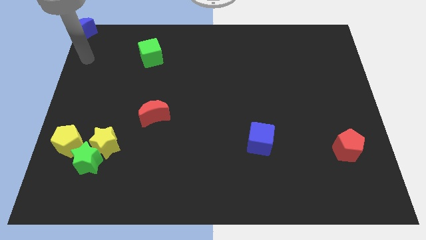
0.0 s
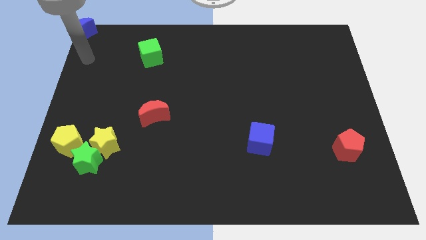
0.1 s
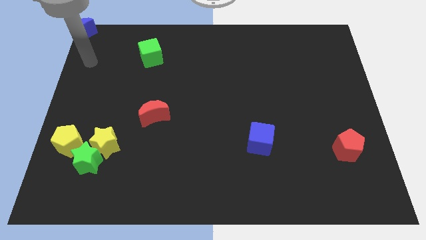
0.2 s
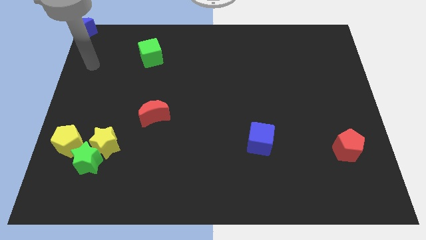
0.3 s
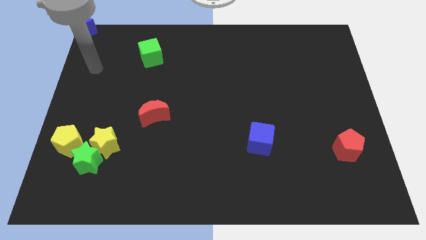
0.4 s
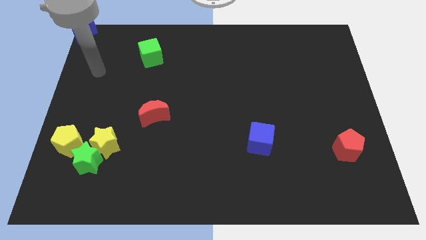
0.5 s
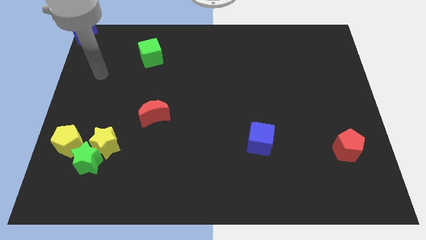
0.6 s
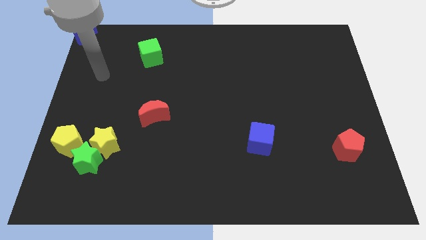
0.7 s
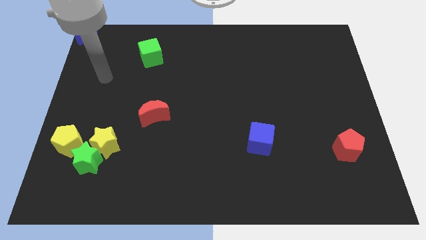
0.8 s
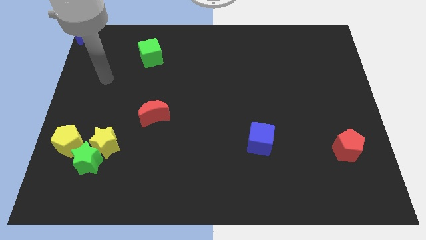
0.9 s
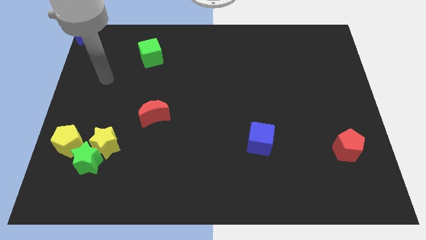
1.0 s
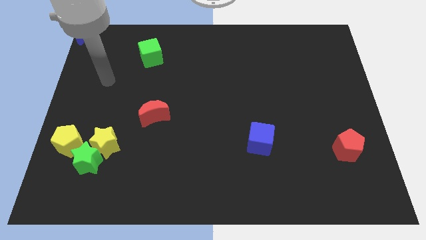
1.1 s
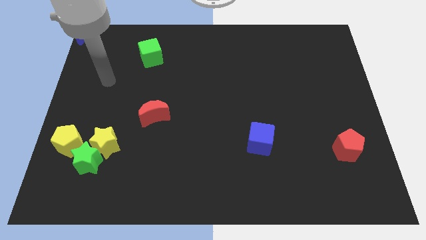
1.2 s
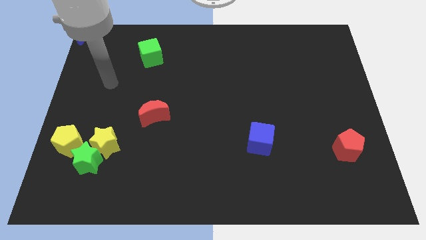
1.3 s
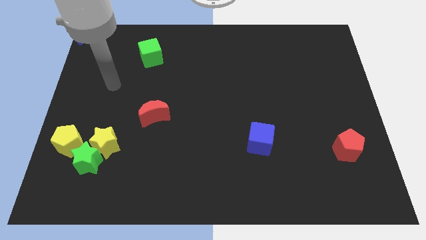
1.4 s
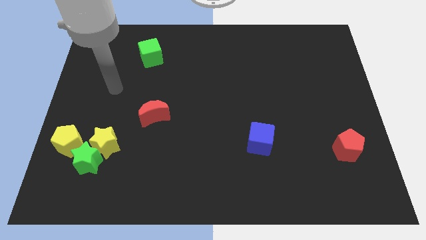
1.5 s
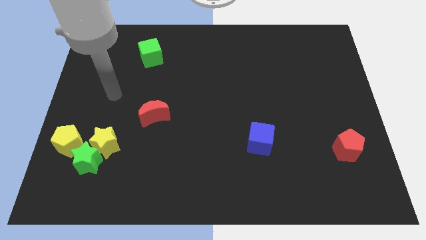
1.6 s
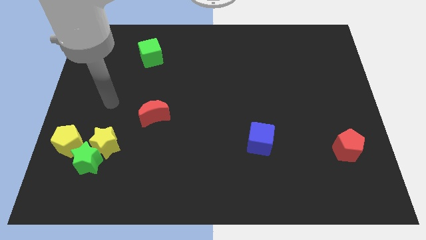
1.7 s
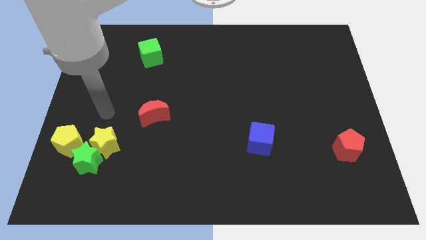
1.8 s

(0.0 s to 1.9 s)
point your arm at the top of the yellow star

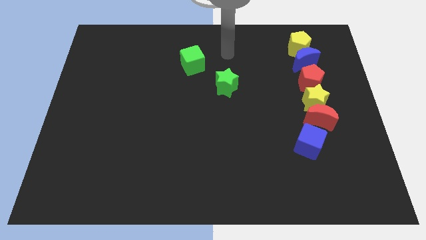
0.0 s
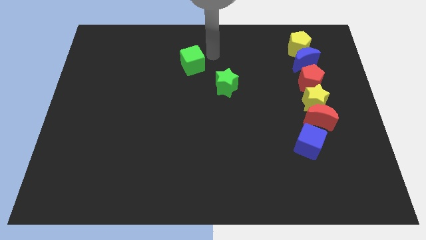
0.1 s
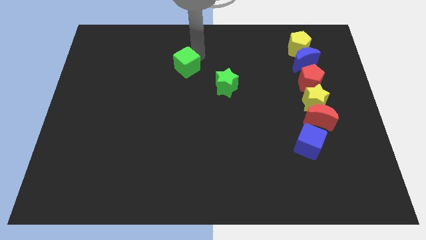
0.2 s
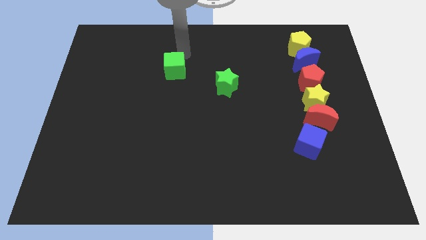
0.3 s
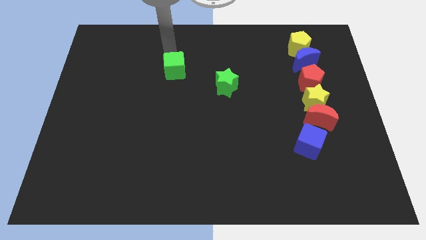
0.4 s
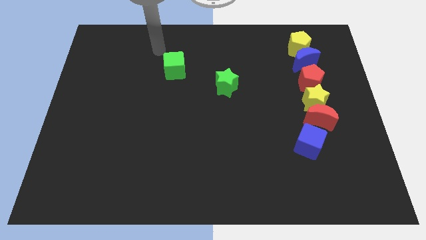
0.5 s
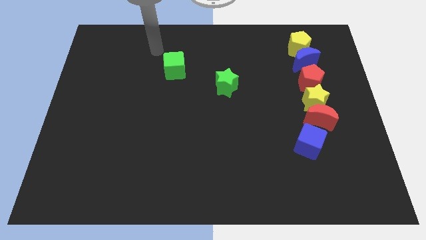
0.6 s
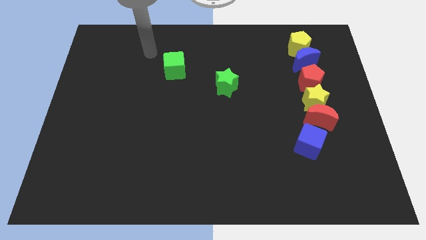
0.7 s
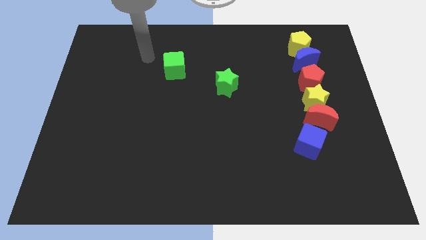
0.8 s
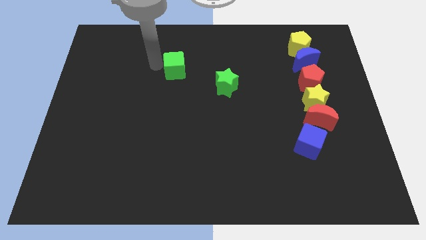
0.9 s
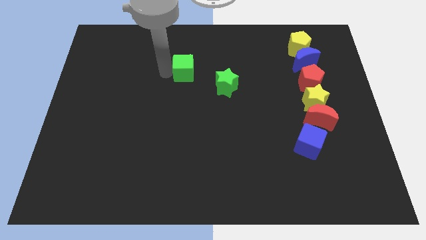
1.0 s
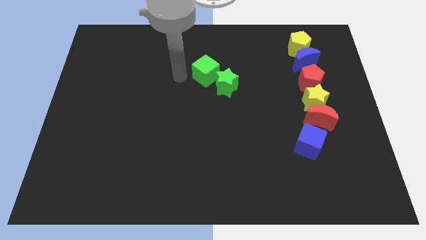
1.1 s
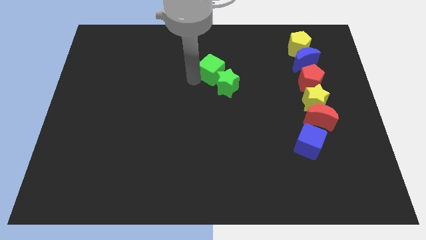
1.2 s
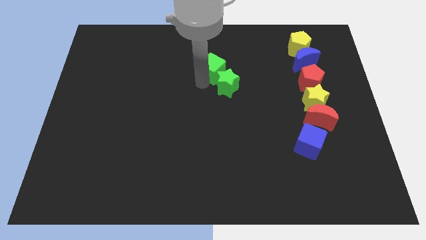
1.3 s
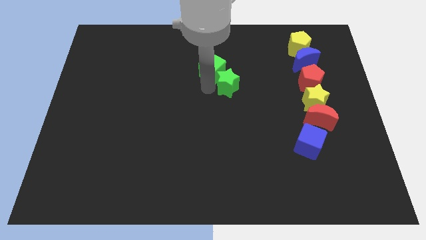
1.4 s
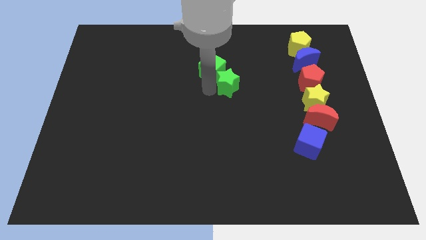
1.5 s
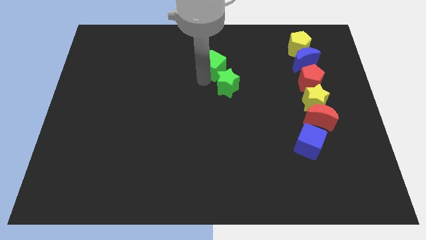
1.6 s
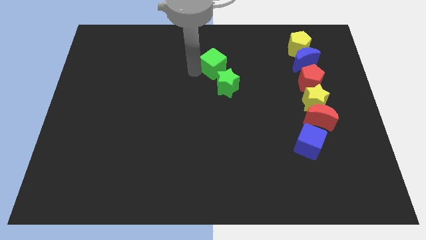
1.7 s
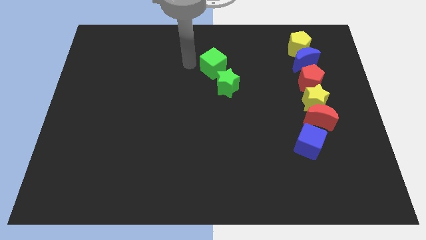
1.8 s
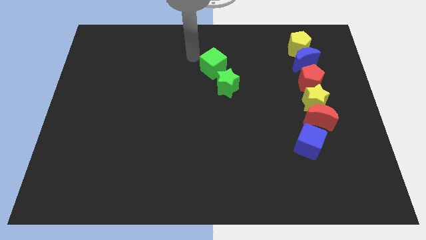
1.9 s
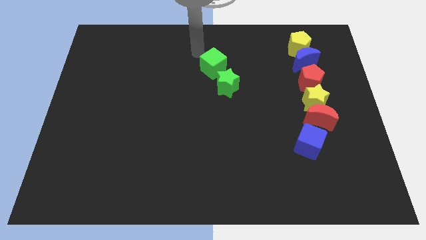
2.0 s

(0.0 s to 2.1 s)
push green cube into green star

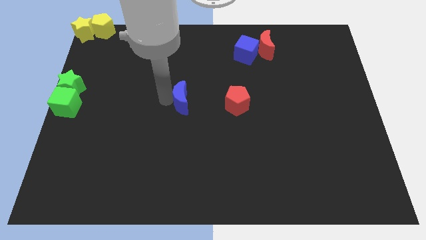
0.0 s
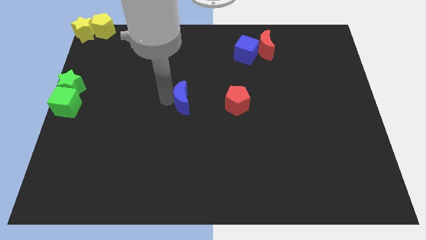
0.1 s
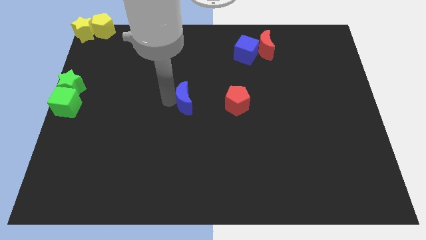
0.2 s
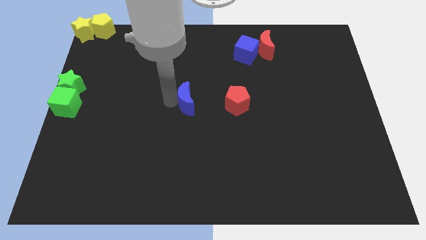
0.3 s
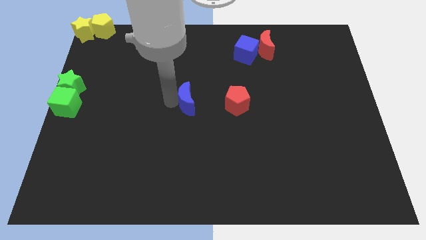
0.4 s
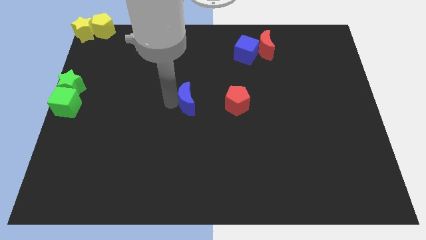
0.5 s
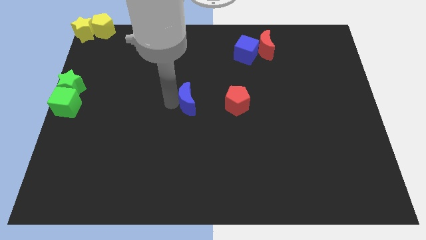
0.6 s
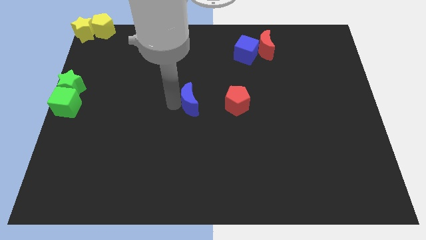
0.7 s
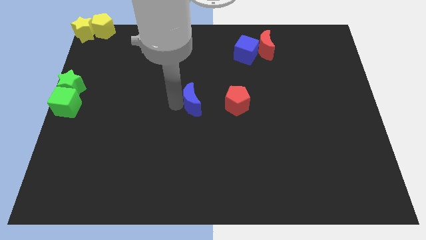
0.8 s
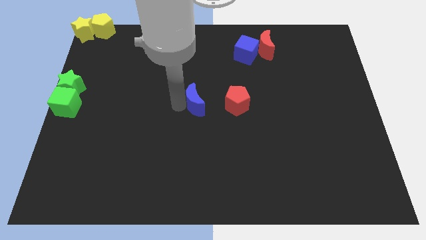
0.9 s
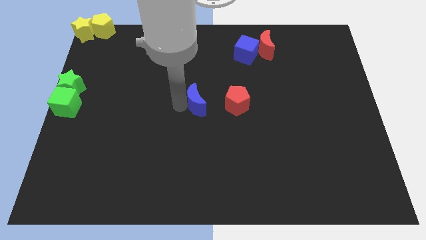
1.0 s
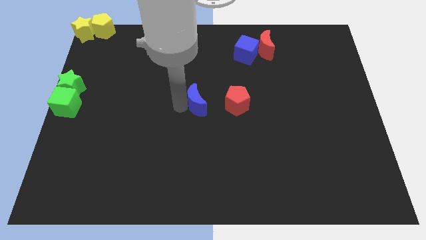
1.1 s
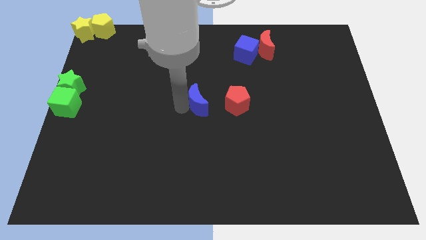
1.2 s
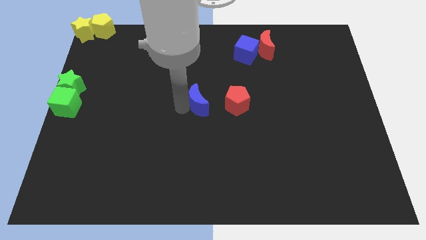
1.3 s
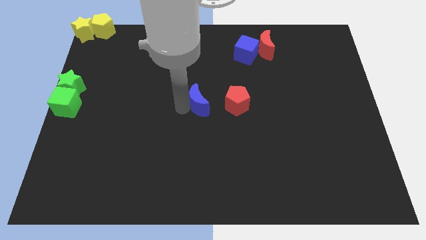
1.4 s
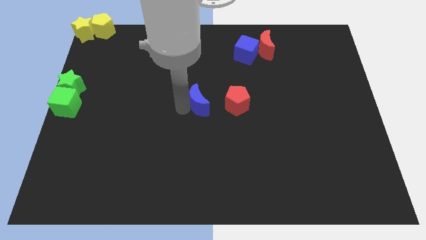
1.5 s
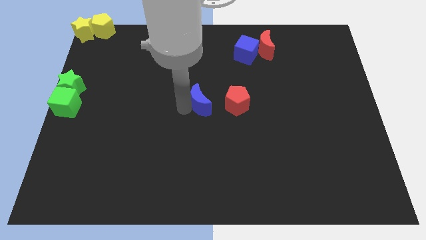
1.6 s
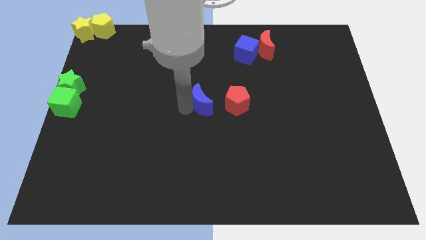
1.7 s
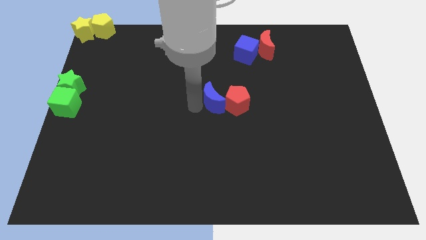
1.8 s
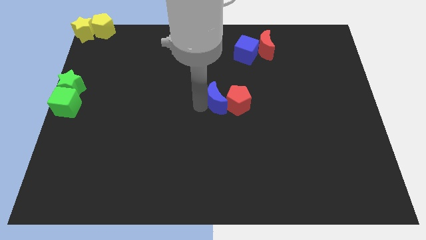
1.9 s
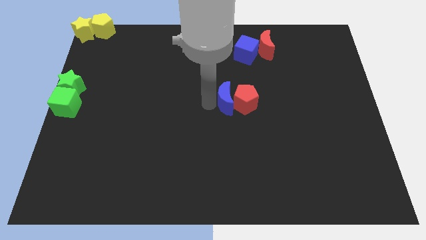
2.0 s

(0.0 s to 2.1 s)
put the blue moon to the left side of red pentagon

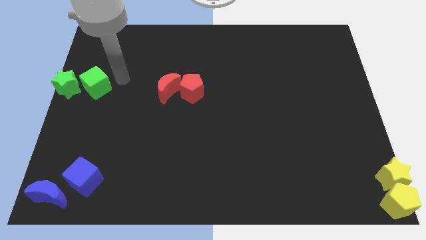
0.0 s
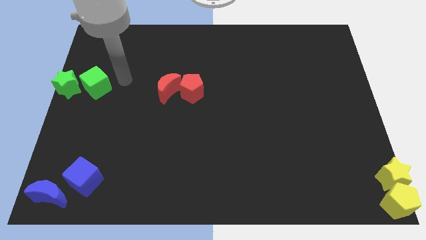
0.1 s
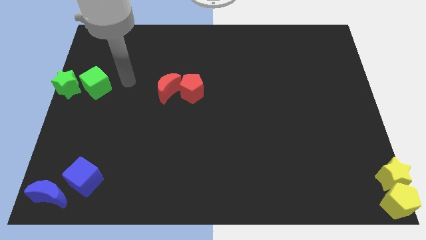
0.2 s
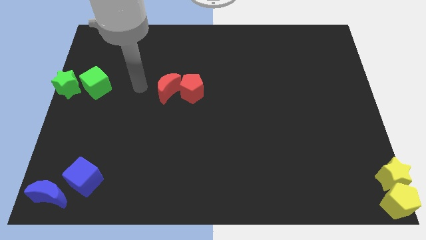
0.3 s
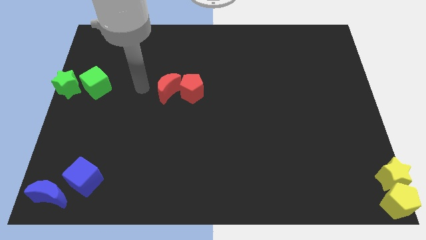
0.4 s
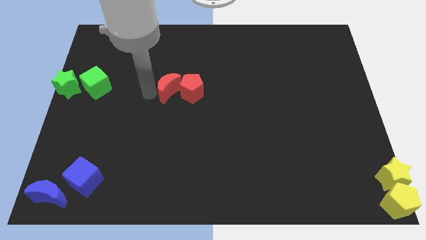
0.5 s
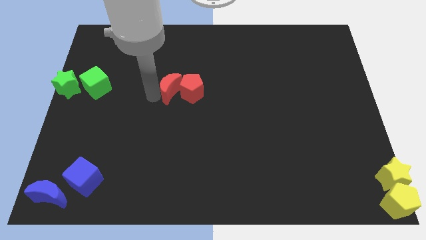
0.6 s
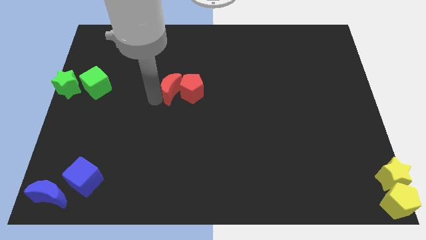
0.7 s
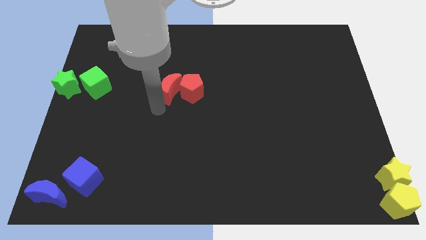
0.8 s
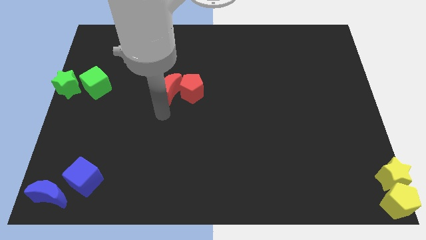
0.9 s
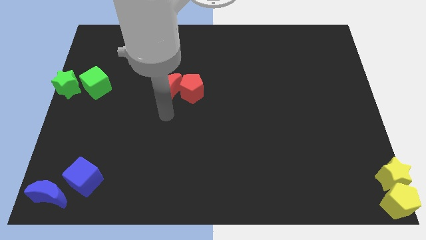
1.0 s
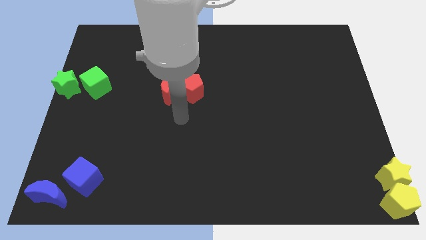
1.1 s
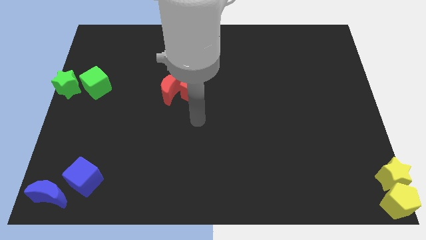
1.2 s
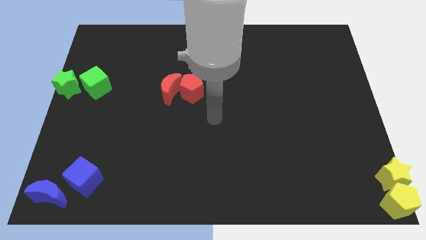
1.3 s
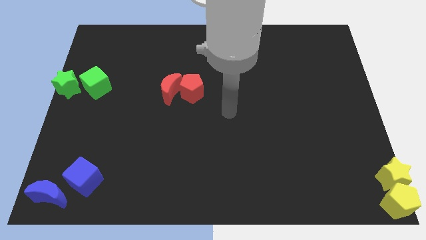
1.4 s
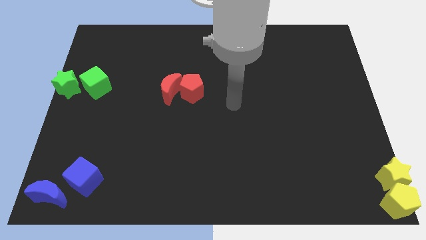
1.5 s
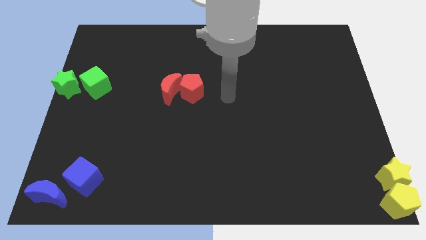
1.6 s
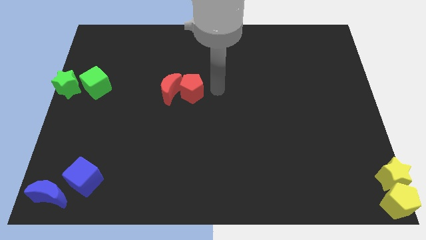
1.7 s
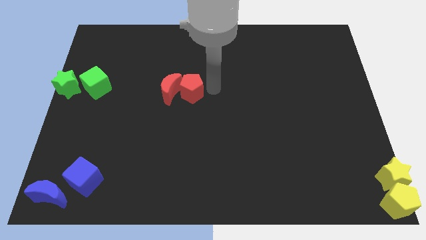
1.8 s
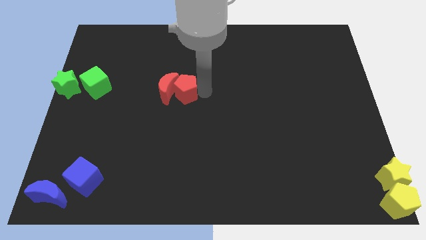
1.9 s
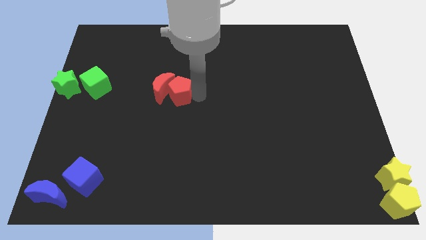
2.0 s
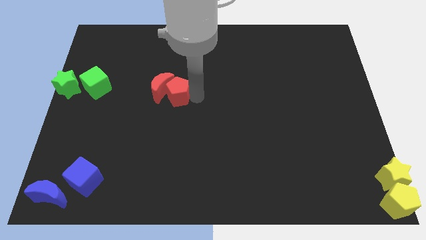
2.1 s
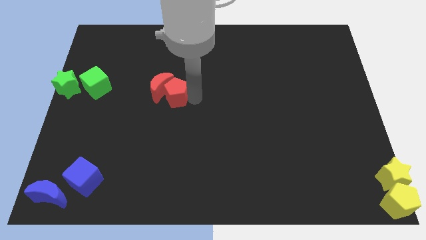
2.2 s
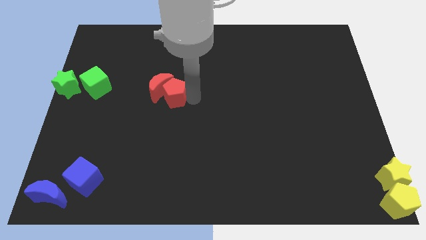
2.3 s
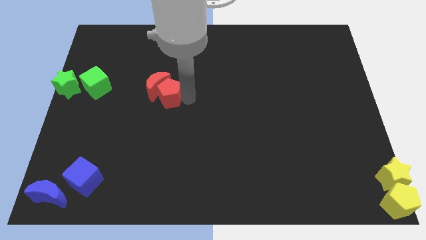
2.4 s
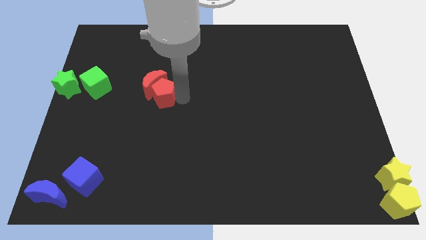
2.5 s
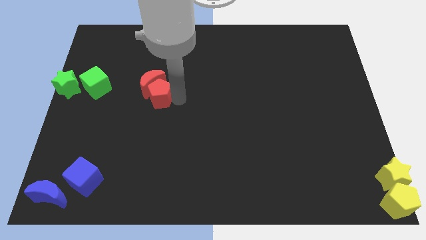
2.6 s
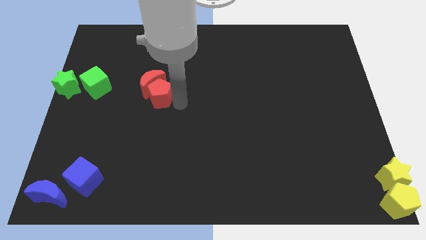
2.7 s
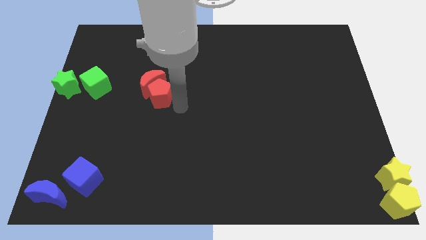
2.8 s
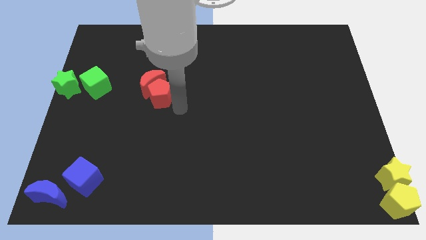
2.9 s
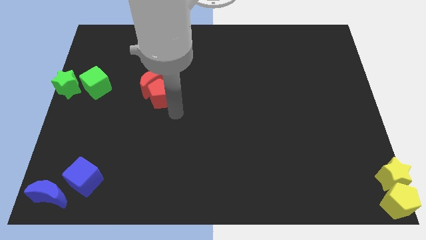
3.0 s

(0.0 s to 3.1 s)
move red blocks towards left side of the board
